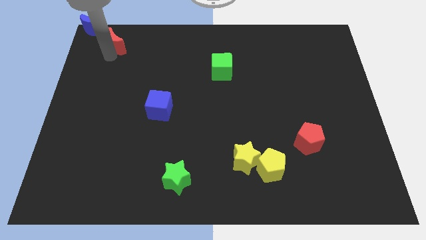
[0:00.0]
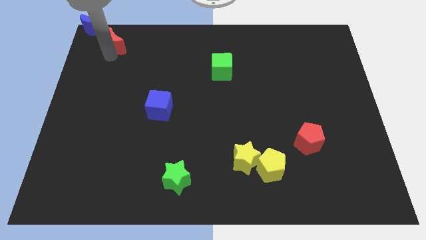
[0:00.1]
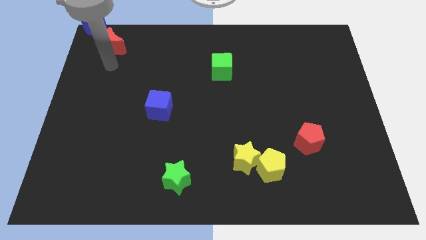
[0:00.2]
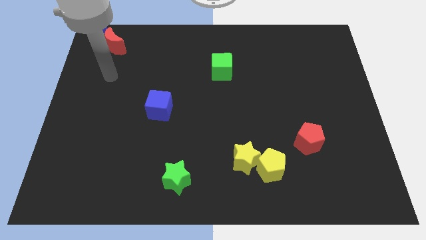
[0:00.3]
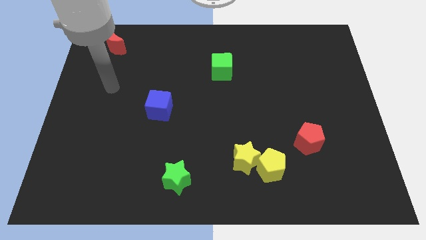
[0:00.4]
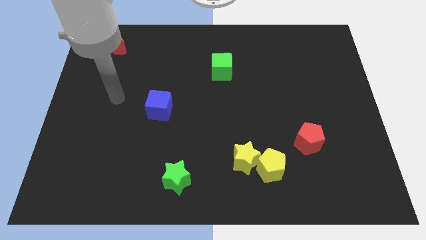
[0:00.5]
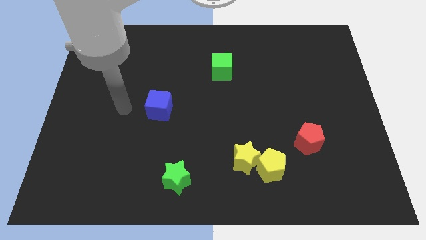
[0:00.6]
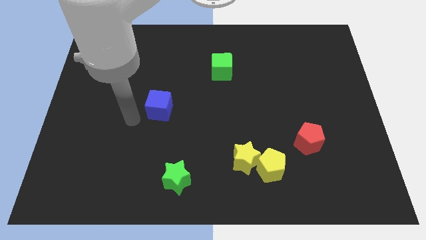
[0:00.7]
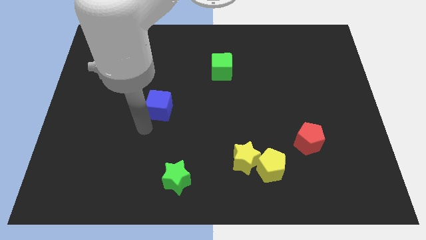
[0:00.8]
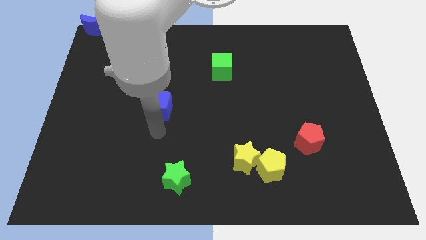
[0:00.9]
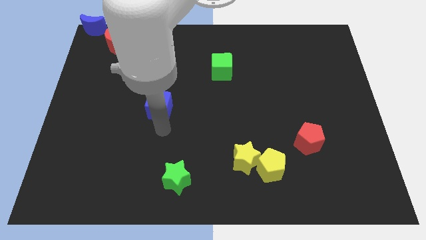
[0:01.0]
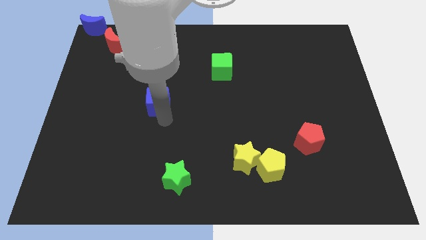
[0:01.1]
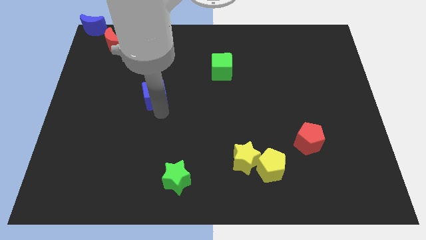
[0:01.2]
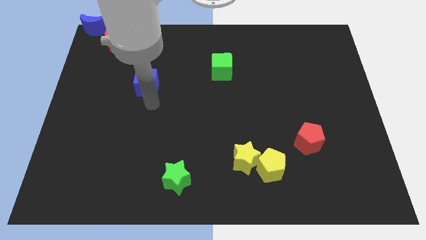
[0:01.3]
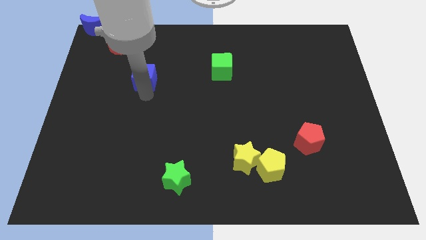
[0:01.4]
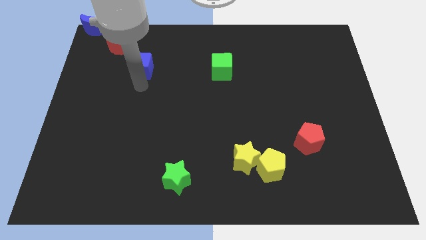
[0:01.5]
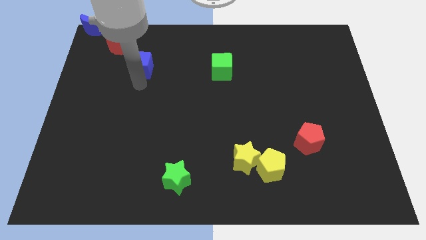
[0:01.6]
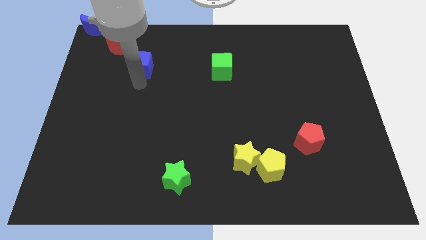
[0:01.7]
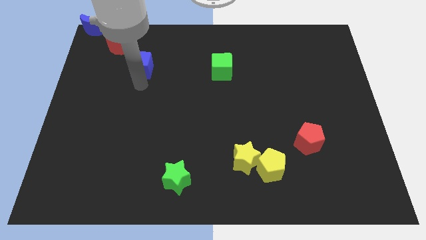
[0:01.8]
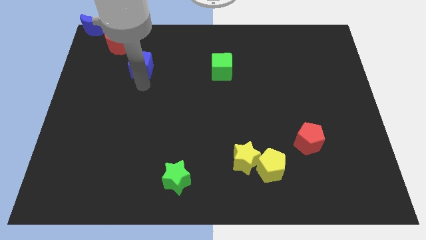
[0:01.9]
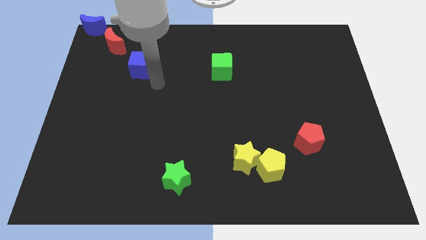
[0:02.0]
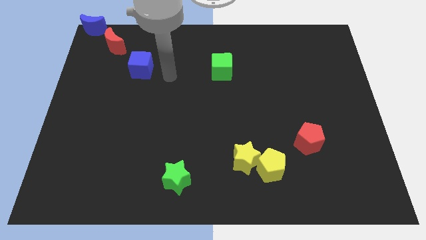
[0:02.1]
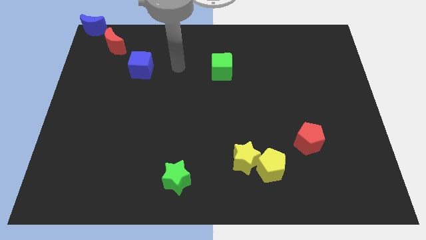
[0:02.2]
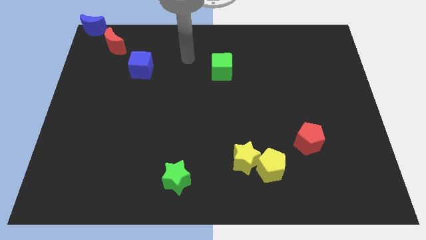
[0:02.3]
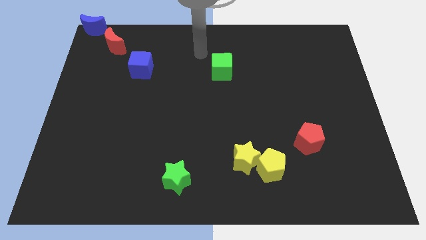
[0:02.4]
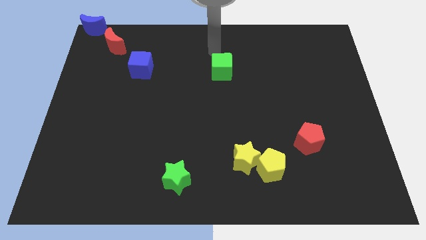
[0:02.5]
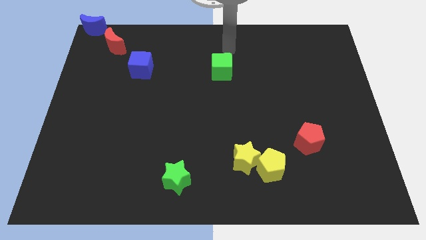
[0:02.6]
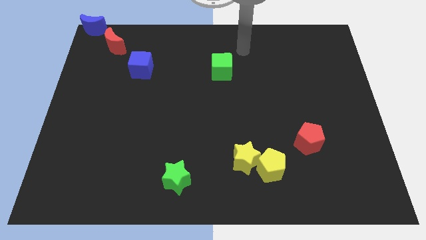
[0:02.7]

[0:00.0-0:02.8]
move the blue cube diagonally to the bottom of the red crescent

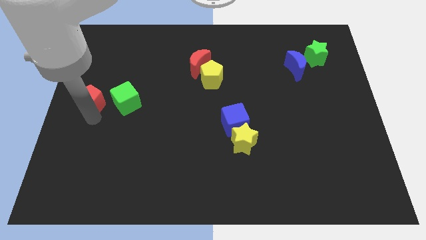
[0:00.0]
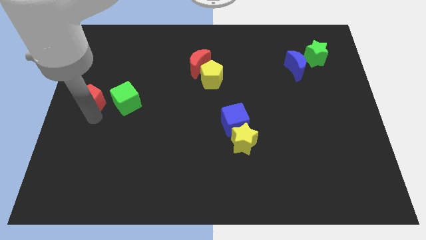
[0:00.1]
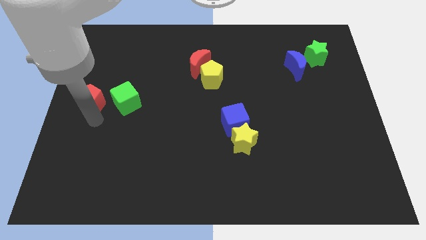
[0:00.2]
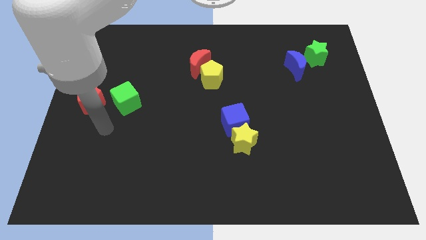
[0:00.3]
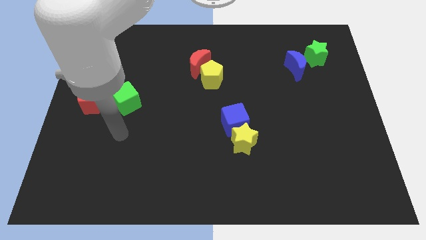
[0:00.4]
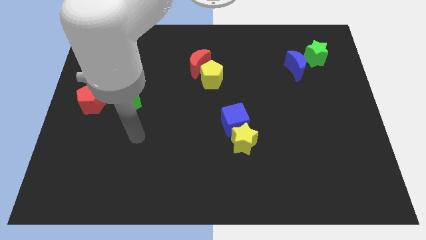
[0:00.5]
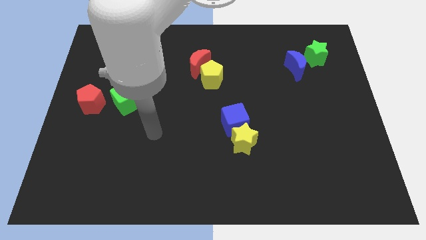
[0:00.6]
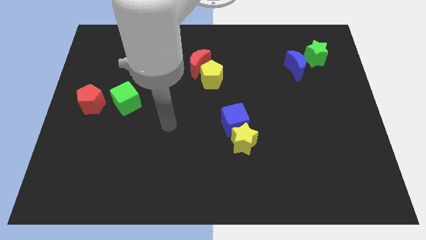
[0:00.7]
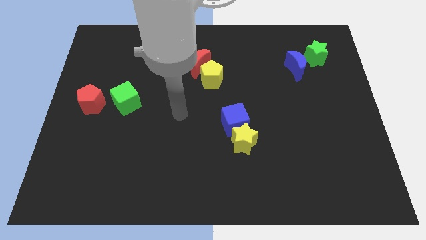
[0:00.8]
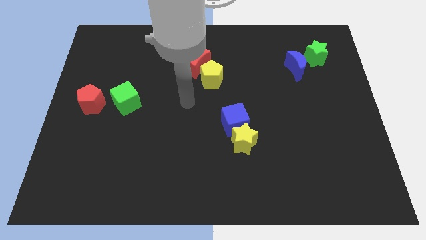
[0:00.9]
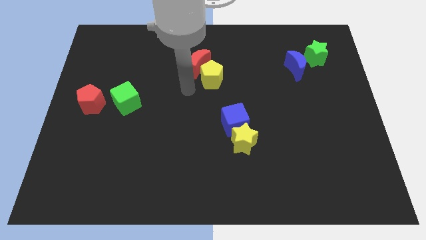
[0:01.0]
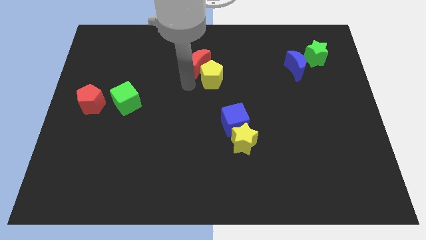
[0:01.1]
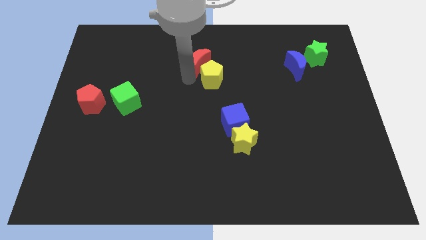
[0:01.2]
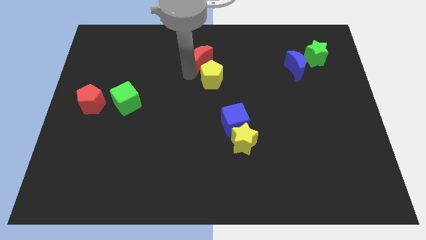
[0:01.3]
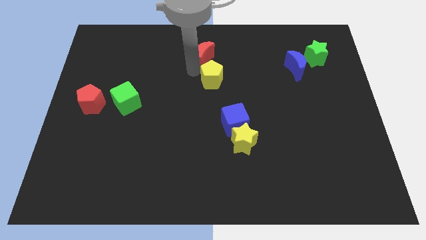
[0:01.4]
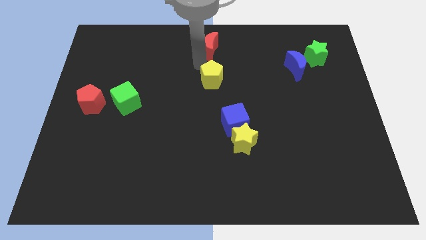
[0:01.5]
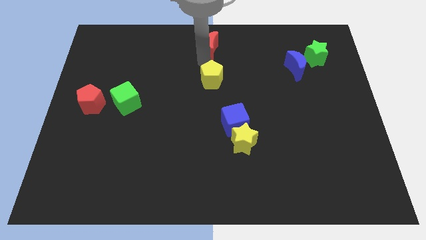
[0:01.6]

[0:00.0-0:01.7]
move the red crescent towards the top center of the board

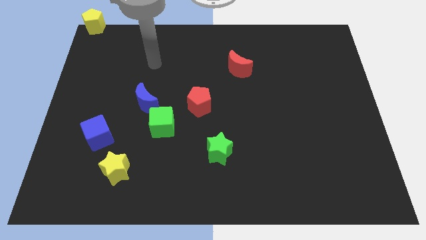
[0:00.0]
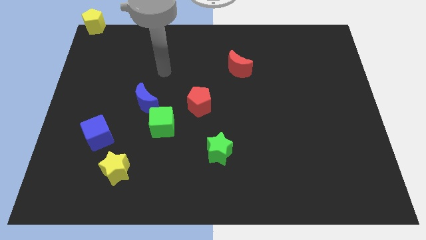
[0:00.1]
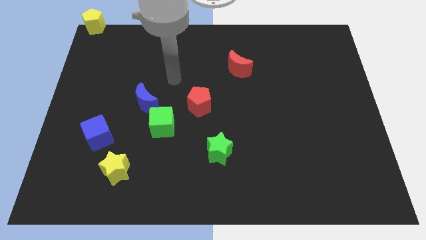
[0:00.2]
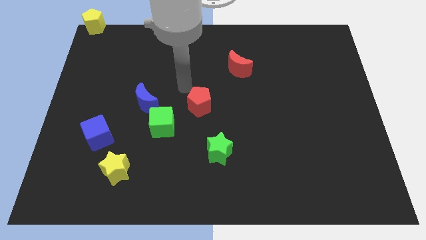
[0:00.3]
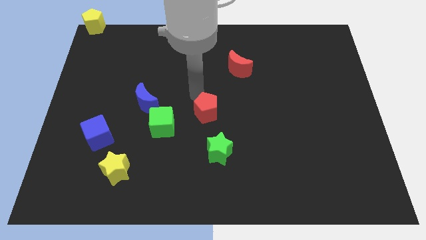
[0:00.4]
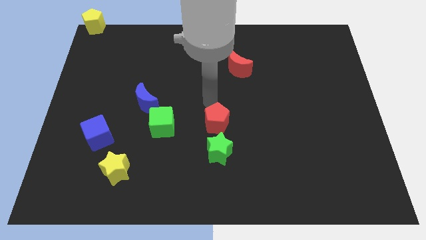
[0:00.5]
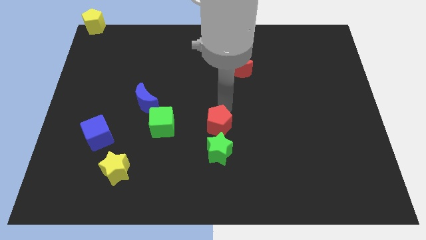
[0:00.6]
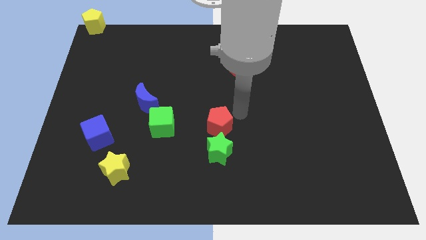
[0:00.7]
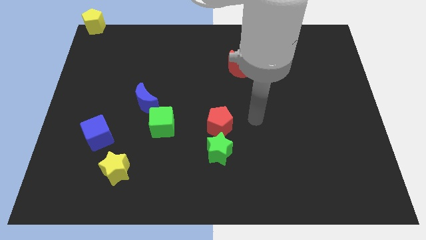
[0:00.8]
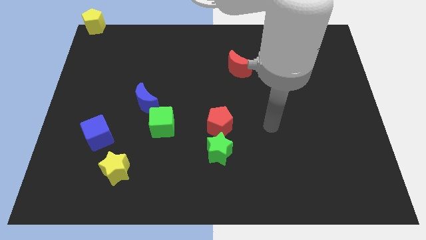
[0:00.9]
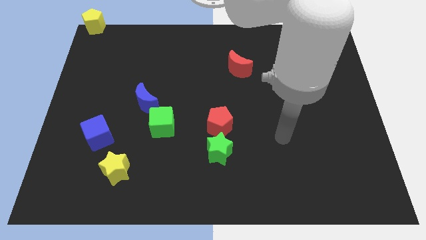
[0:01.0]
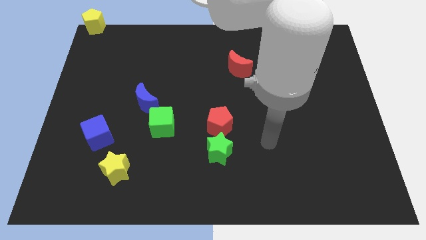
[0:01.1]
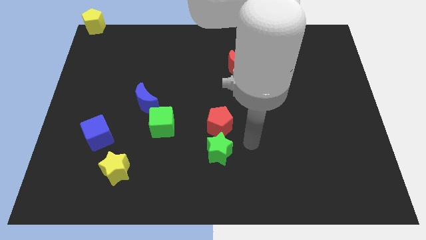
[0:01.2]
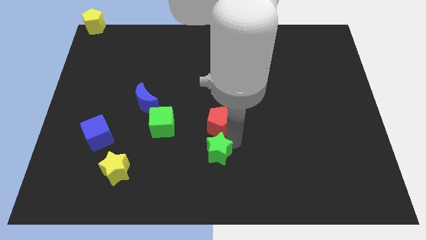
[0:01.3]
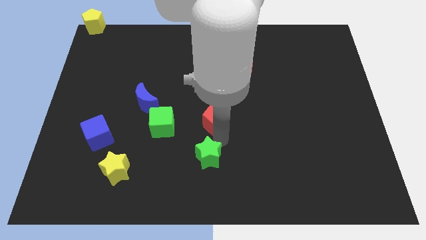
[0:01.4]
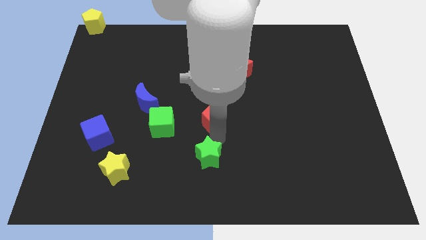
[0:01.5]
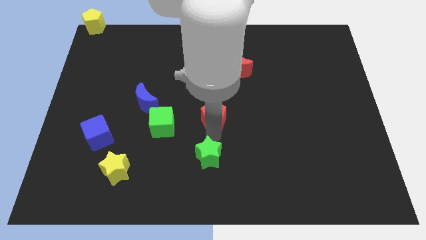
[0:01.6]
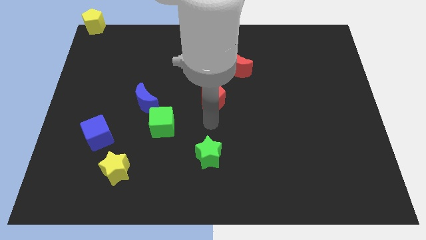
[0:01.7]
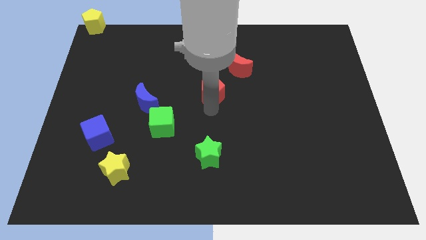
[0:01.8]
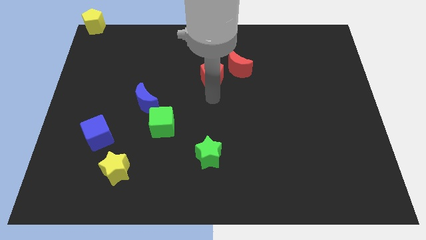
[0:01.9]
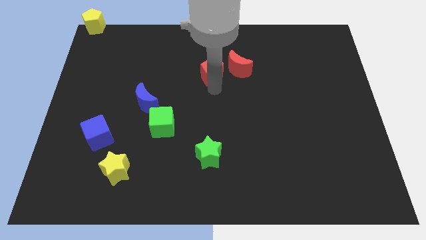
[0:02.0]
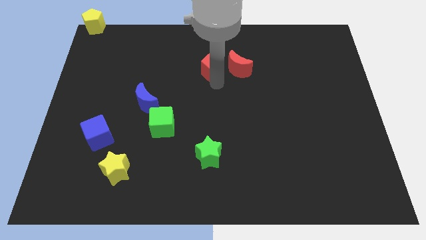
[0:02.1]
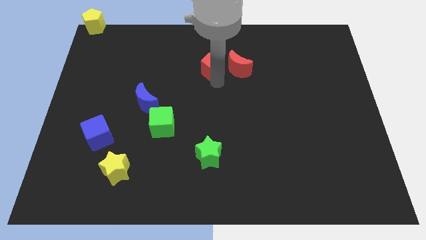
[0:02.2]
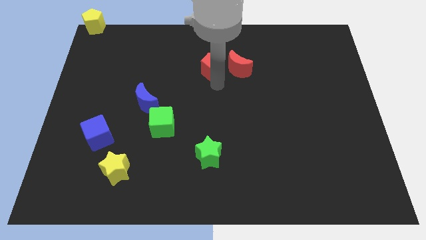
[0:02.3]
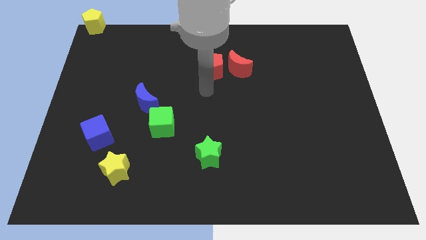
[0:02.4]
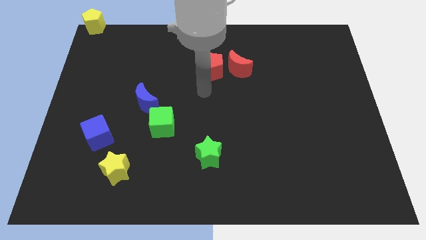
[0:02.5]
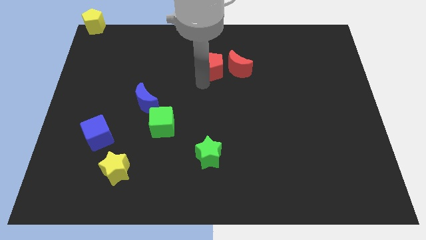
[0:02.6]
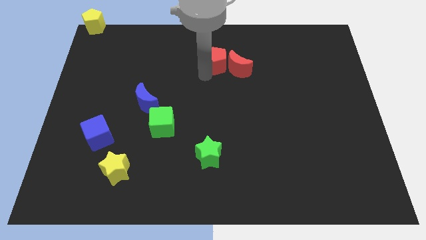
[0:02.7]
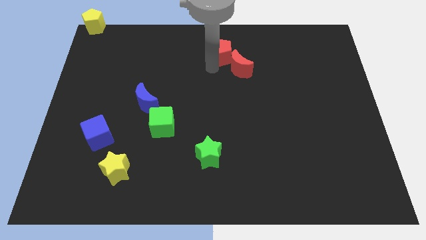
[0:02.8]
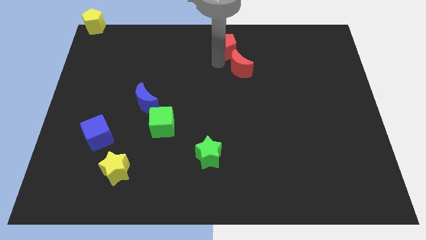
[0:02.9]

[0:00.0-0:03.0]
place the red pentagon near the red moon

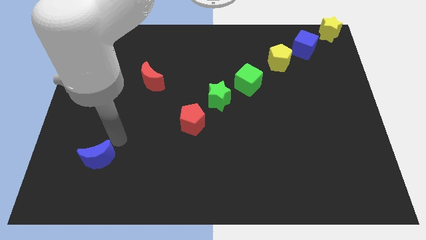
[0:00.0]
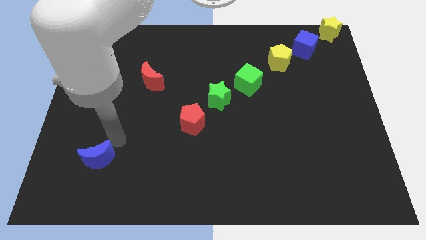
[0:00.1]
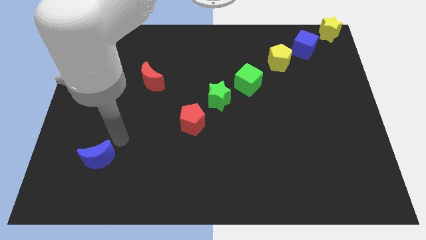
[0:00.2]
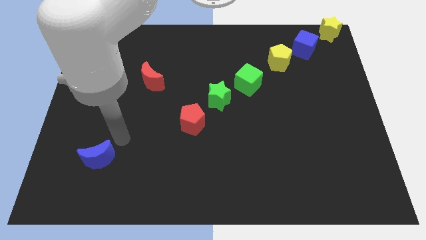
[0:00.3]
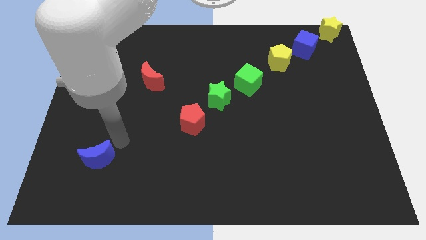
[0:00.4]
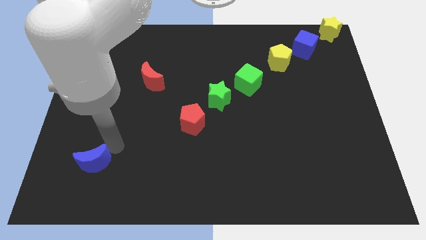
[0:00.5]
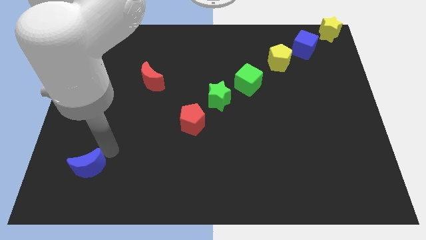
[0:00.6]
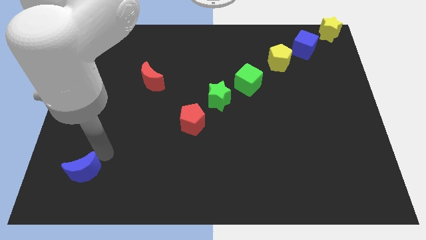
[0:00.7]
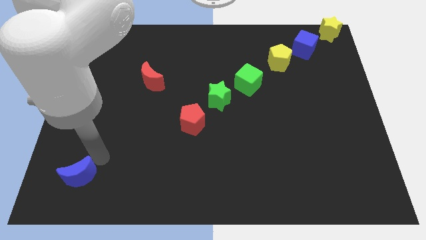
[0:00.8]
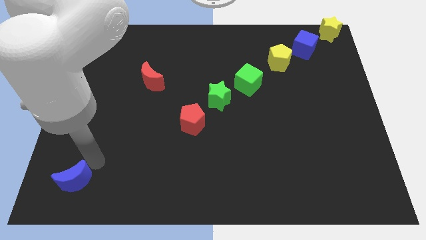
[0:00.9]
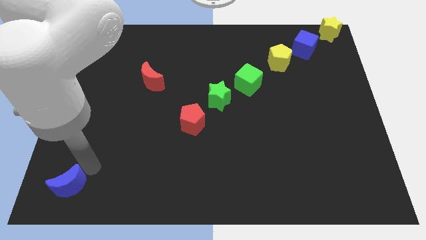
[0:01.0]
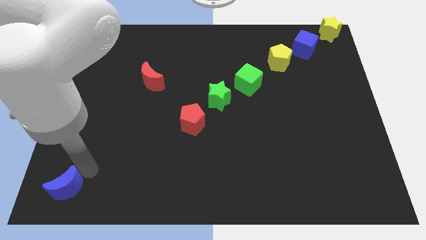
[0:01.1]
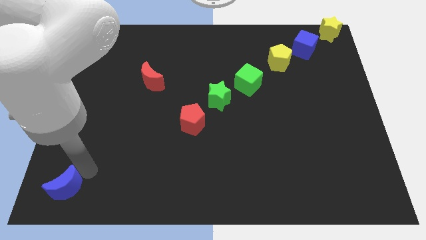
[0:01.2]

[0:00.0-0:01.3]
move blue moon to the bottom left corner of the board

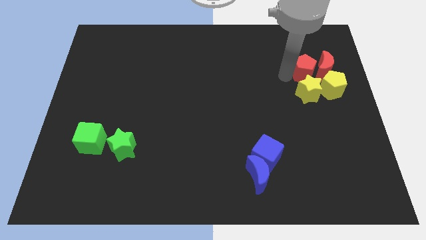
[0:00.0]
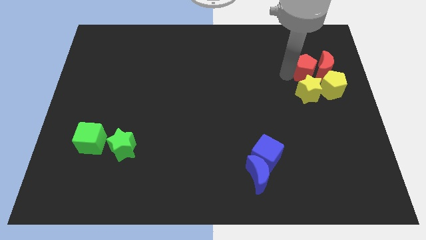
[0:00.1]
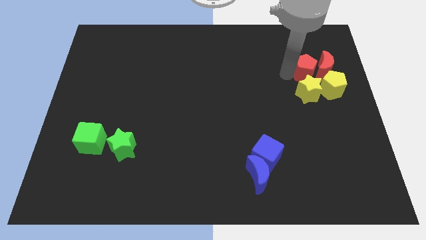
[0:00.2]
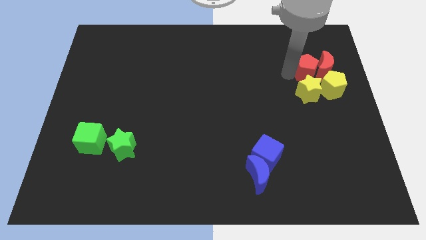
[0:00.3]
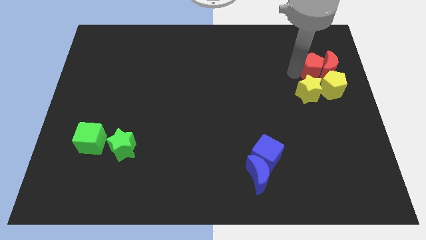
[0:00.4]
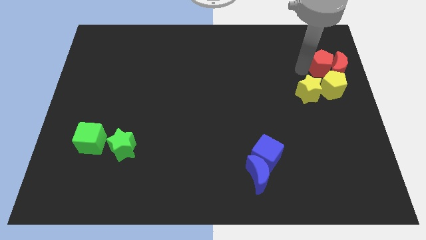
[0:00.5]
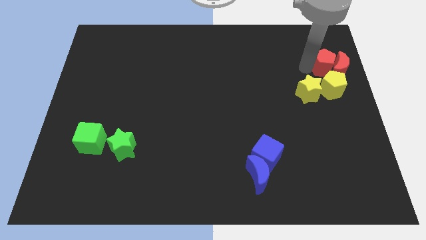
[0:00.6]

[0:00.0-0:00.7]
push the red pentagon into the red moon
